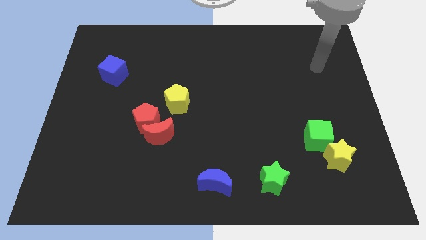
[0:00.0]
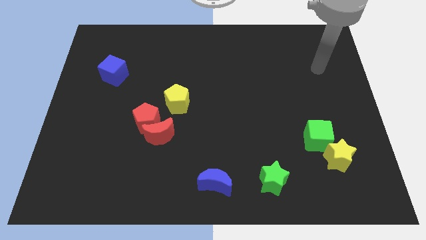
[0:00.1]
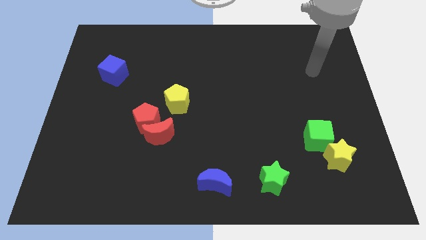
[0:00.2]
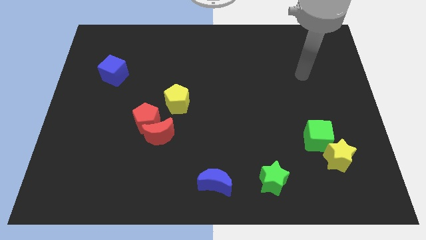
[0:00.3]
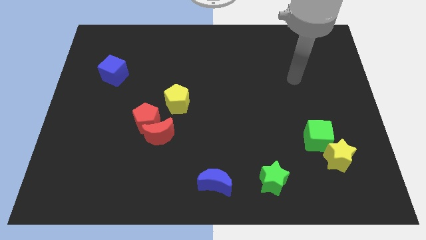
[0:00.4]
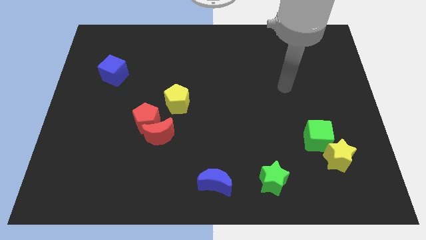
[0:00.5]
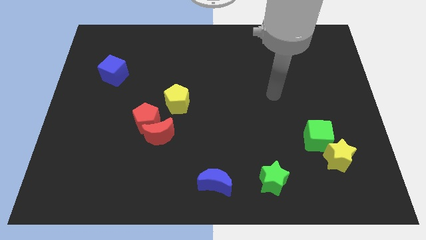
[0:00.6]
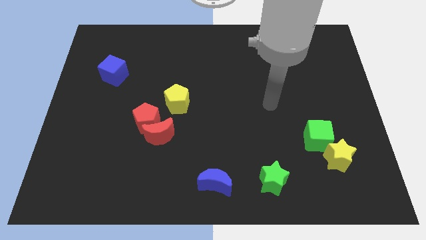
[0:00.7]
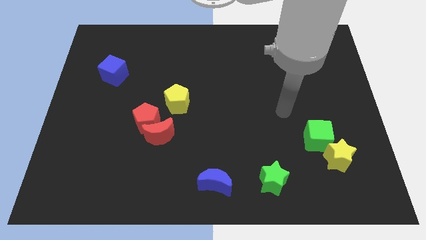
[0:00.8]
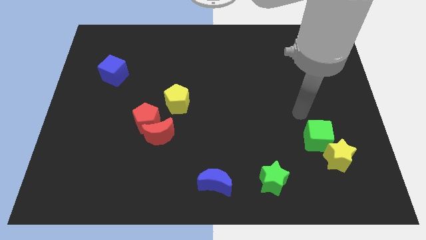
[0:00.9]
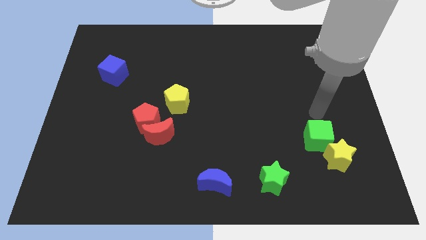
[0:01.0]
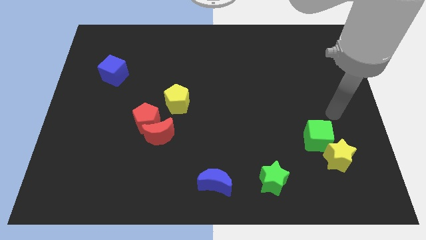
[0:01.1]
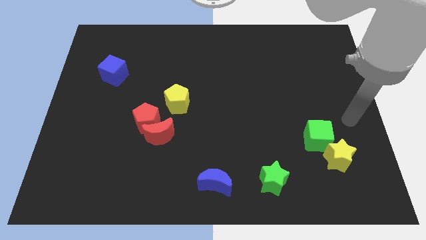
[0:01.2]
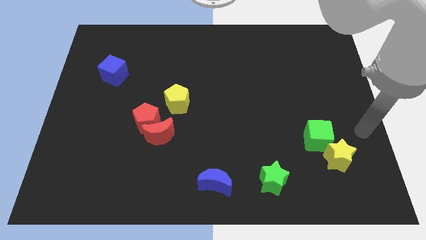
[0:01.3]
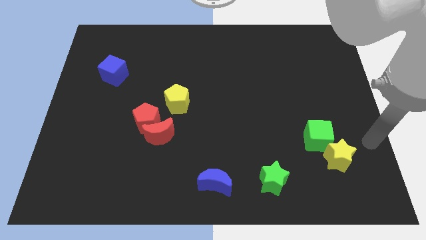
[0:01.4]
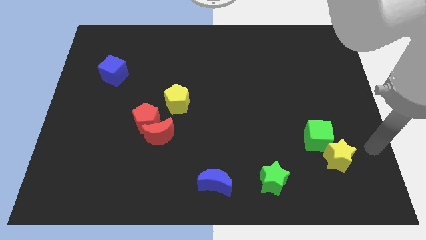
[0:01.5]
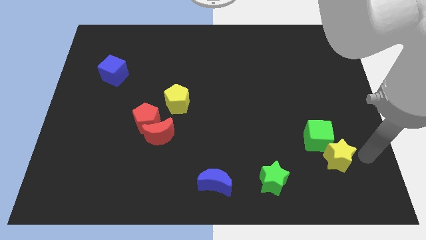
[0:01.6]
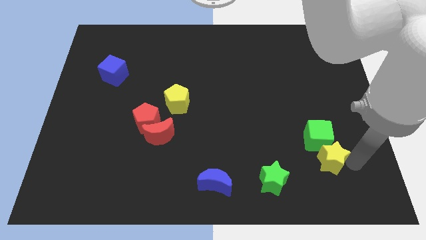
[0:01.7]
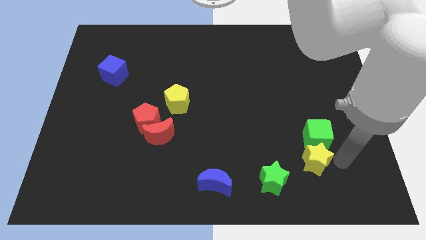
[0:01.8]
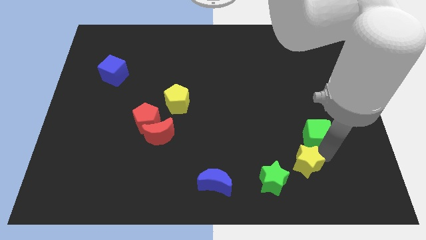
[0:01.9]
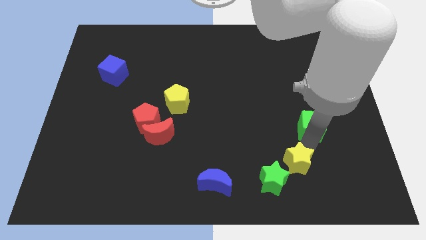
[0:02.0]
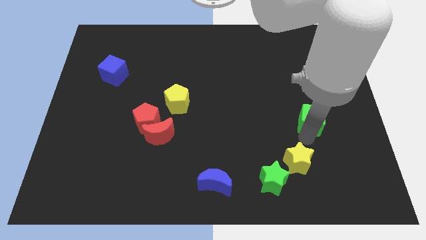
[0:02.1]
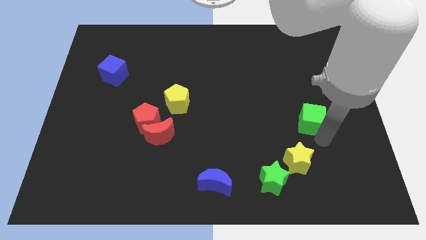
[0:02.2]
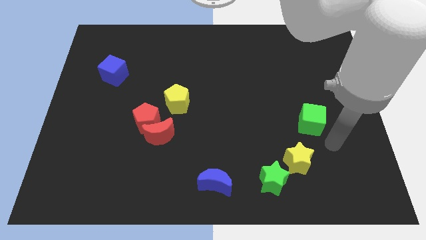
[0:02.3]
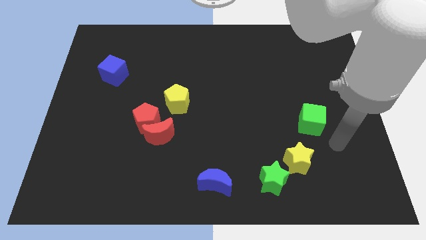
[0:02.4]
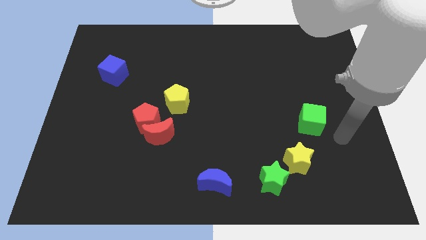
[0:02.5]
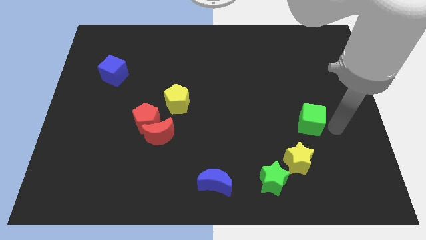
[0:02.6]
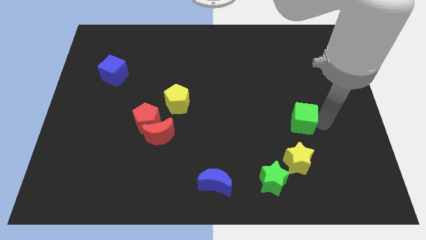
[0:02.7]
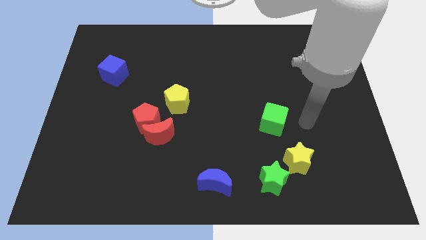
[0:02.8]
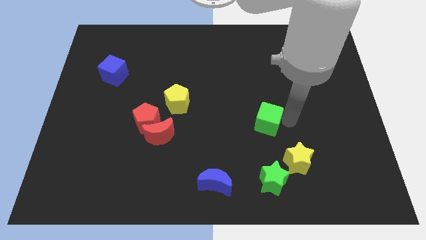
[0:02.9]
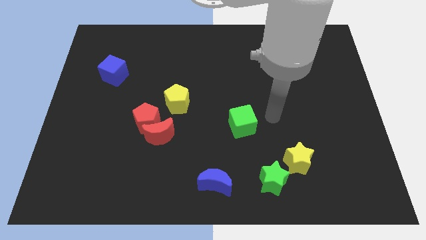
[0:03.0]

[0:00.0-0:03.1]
move the yellow star and green cube diagonal to each other

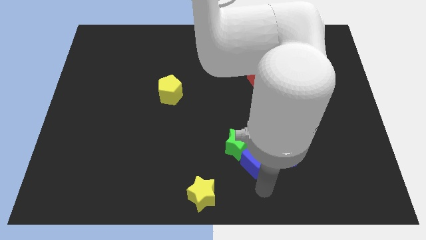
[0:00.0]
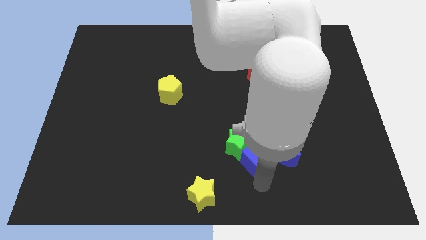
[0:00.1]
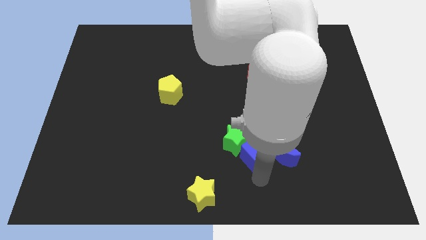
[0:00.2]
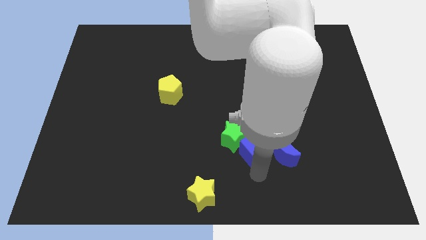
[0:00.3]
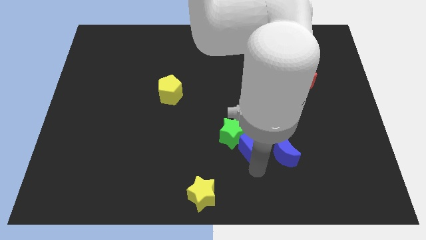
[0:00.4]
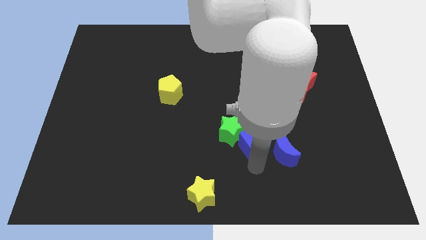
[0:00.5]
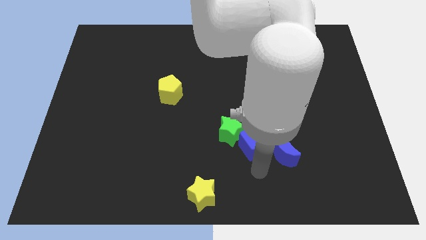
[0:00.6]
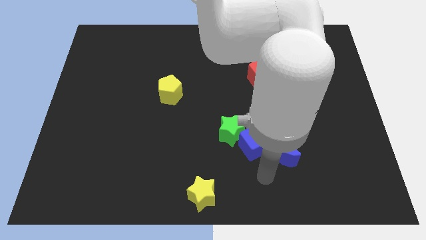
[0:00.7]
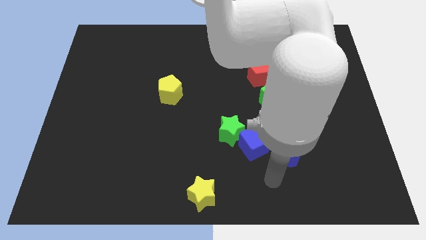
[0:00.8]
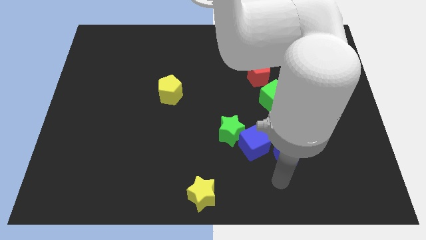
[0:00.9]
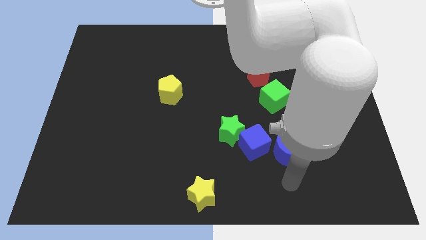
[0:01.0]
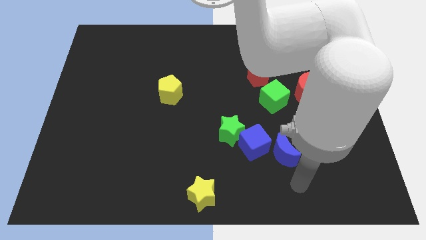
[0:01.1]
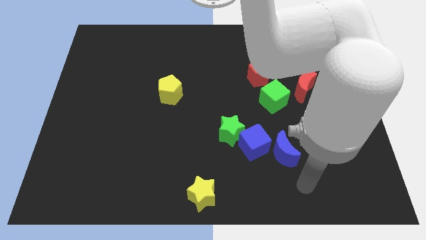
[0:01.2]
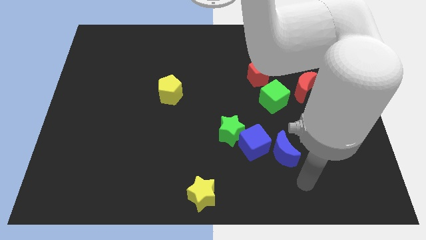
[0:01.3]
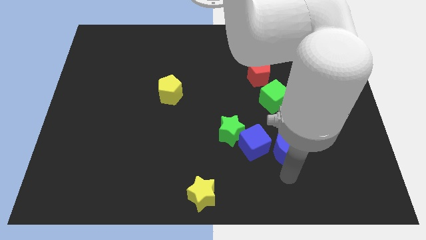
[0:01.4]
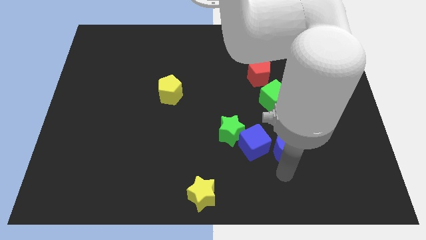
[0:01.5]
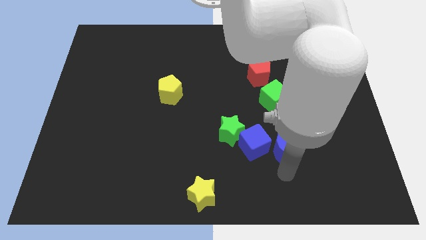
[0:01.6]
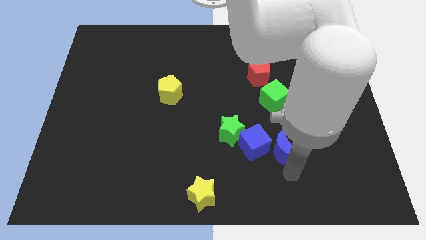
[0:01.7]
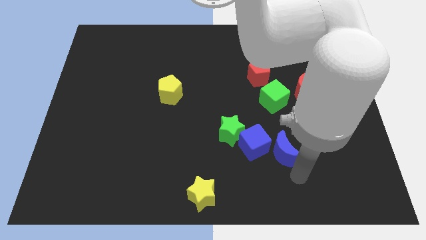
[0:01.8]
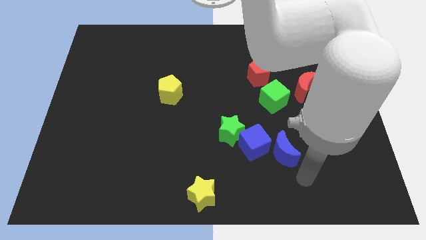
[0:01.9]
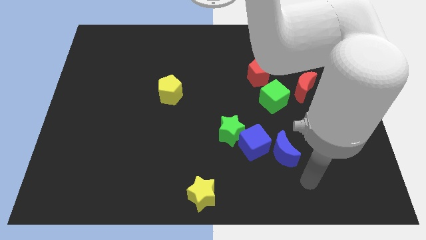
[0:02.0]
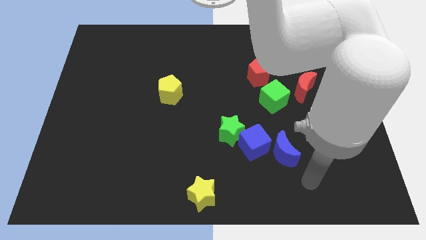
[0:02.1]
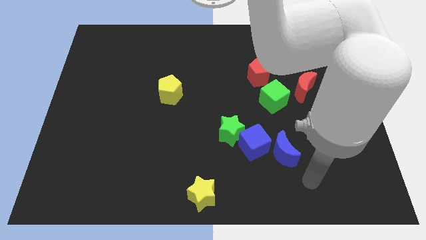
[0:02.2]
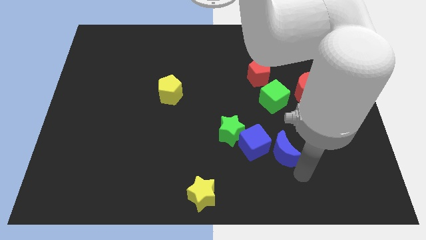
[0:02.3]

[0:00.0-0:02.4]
push the blue cube slightly to the top

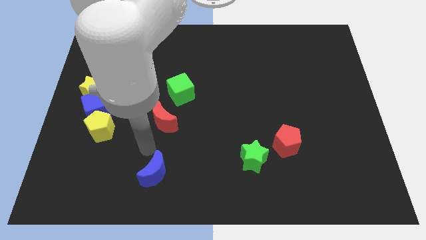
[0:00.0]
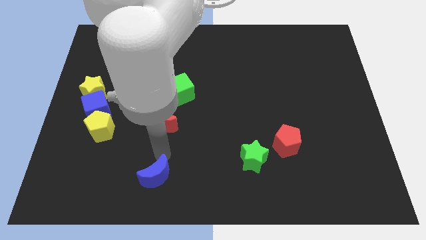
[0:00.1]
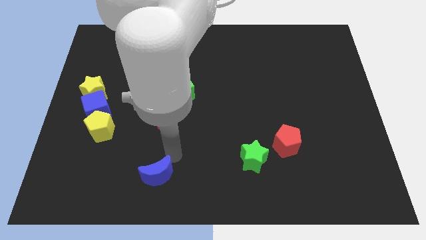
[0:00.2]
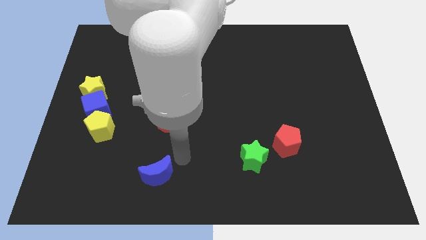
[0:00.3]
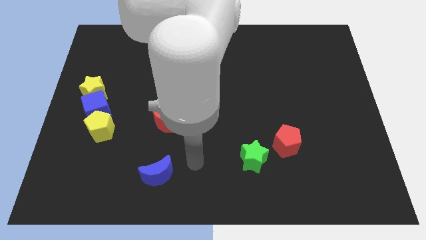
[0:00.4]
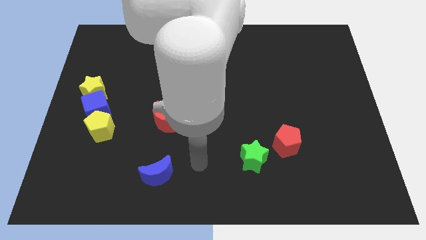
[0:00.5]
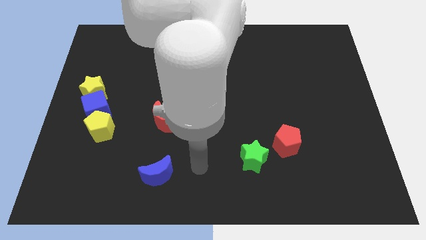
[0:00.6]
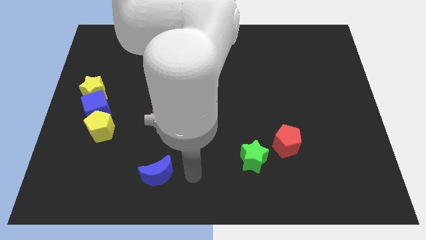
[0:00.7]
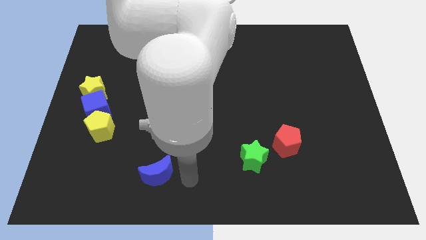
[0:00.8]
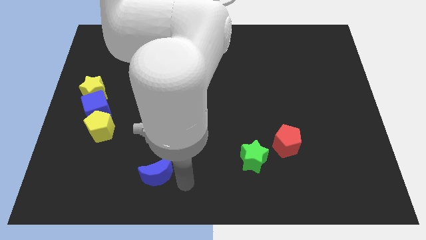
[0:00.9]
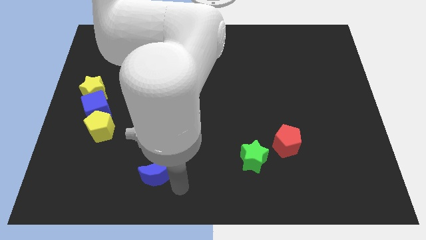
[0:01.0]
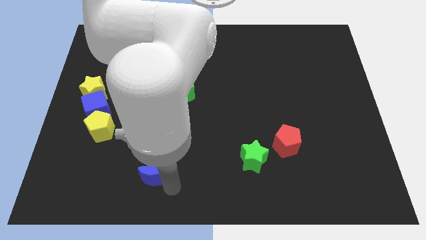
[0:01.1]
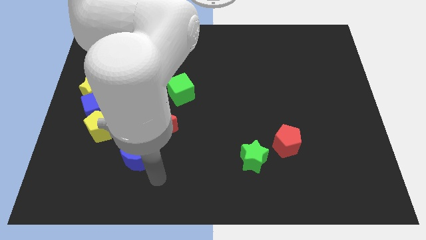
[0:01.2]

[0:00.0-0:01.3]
drag the blue crescent horizontally to the left side of the green star

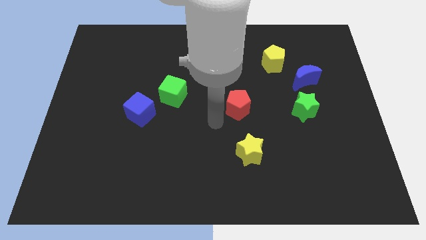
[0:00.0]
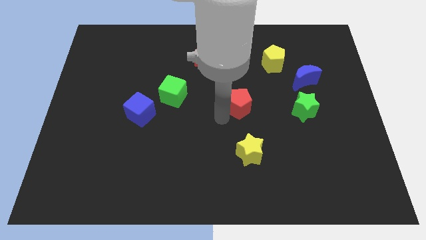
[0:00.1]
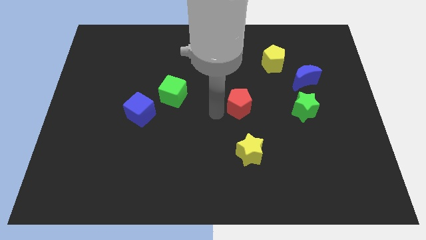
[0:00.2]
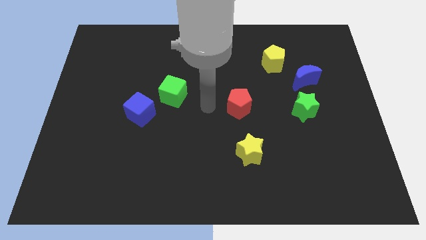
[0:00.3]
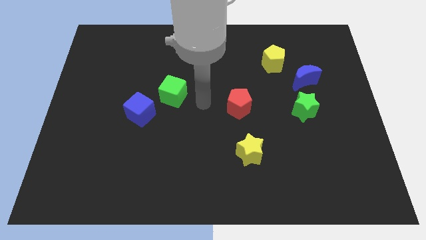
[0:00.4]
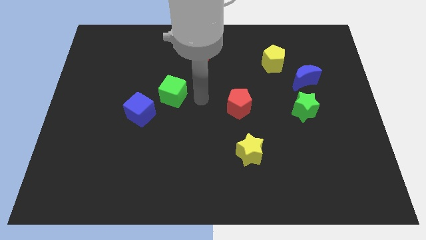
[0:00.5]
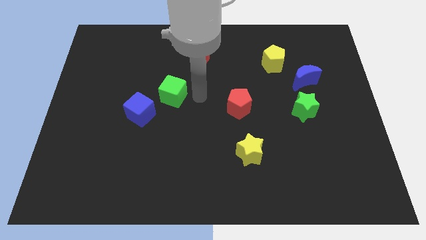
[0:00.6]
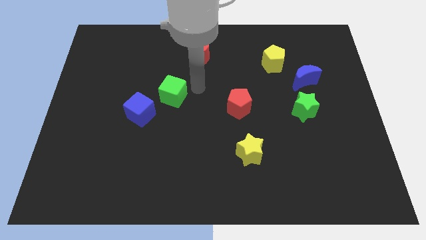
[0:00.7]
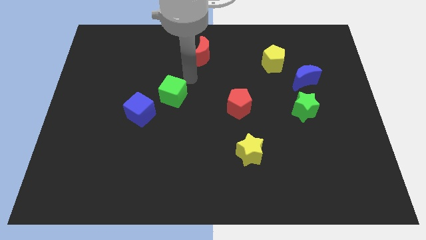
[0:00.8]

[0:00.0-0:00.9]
push your hand in between the red moon and green cube

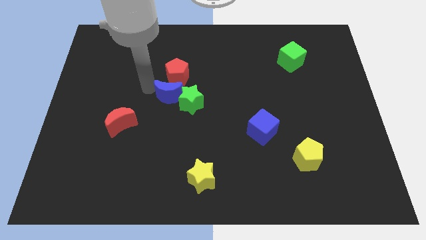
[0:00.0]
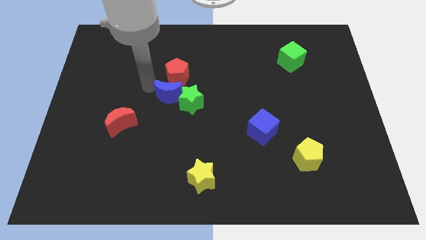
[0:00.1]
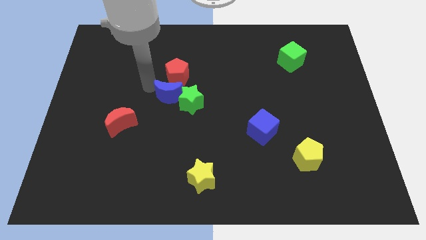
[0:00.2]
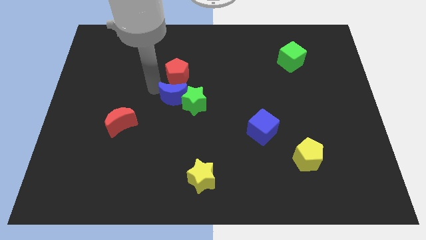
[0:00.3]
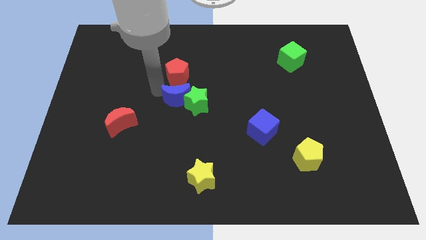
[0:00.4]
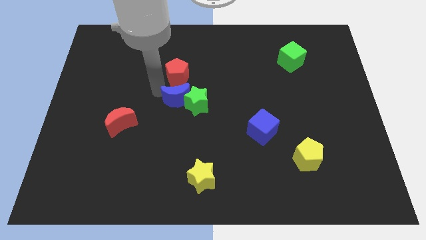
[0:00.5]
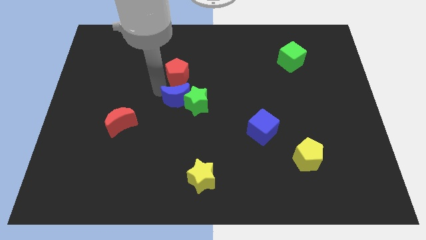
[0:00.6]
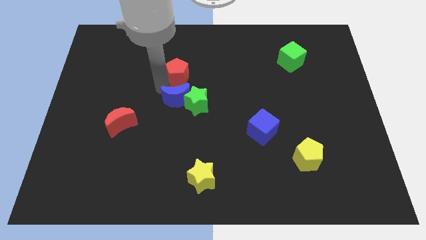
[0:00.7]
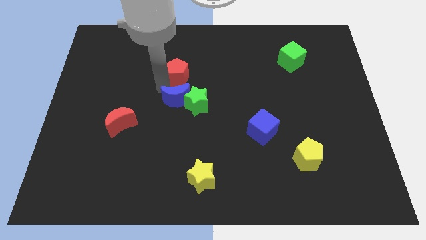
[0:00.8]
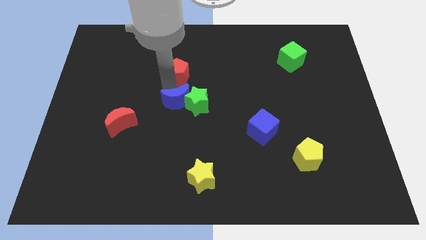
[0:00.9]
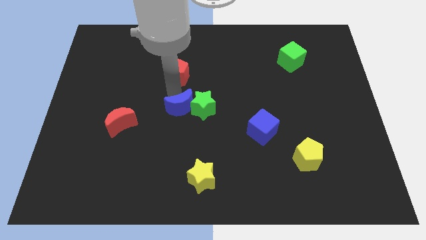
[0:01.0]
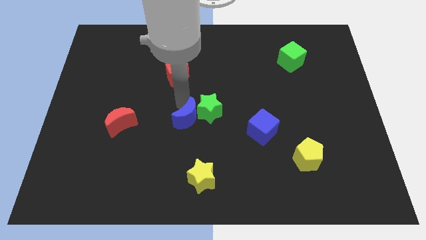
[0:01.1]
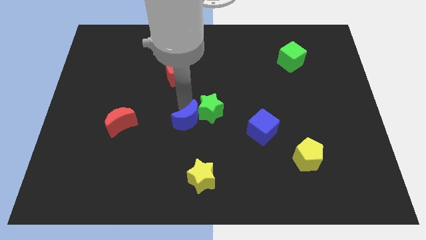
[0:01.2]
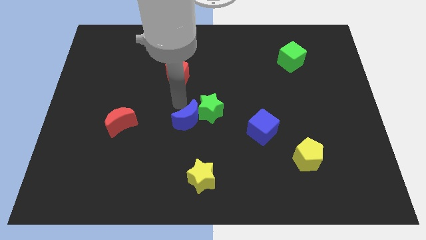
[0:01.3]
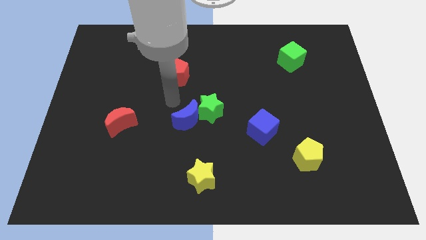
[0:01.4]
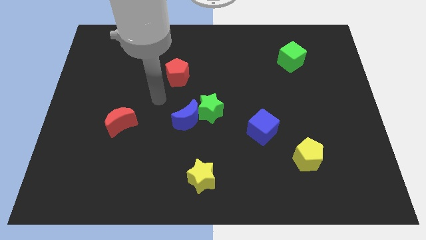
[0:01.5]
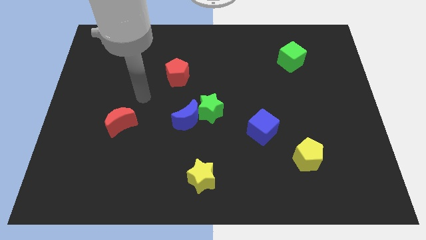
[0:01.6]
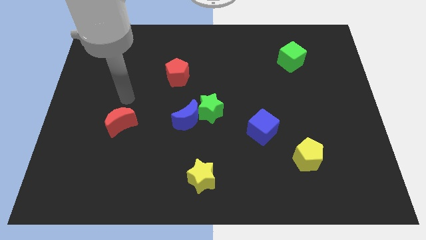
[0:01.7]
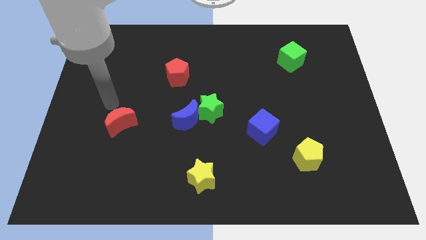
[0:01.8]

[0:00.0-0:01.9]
place the blue moon and green star towards center side
